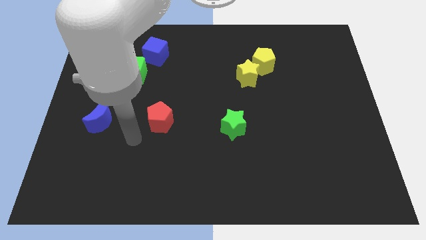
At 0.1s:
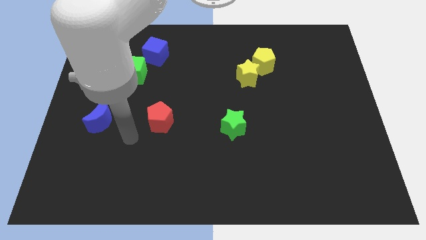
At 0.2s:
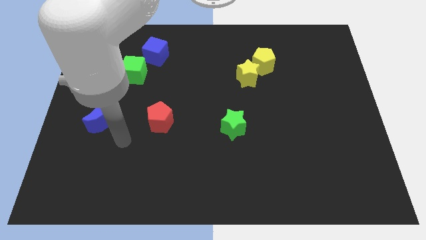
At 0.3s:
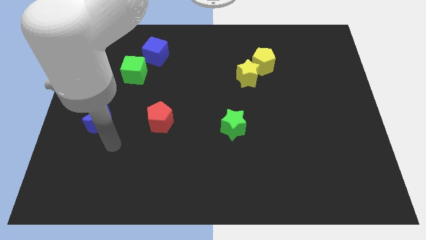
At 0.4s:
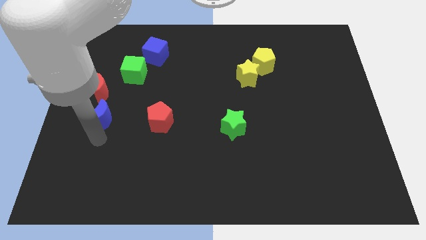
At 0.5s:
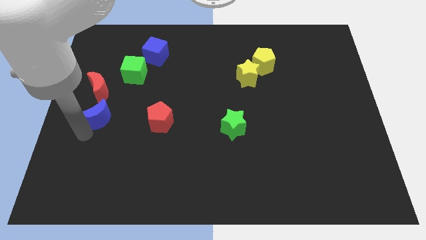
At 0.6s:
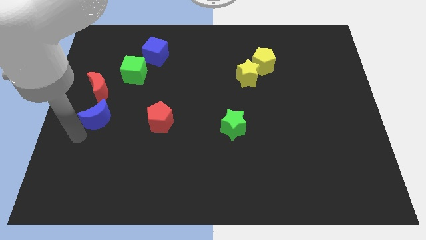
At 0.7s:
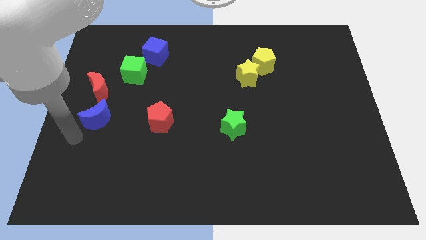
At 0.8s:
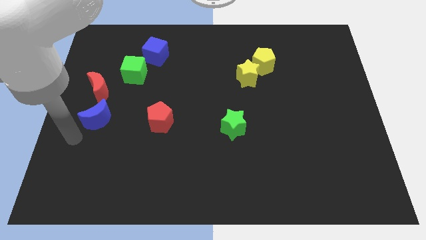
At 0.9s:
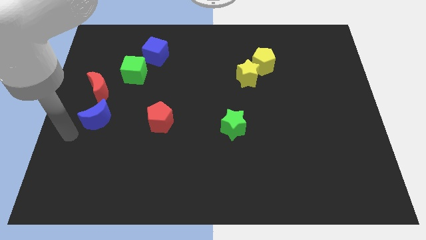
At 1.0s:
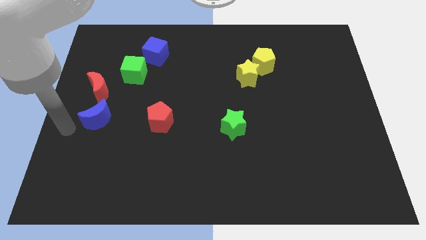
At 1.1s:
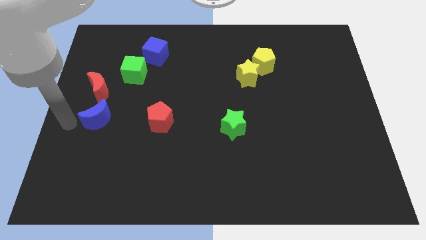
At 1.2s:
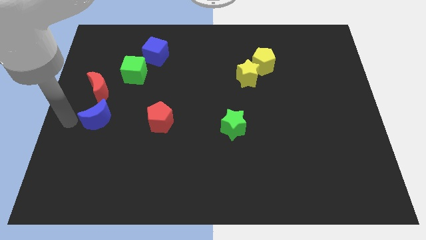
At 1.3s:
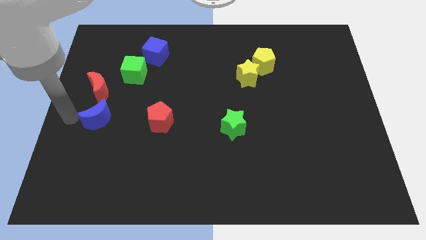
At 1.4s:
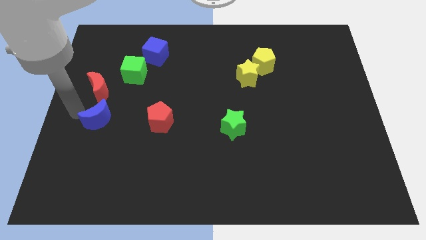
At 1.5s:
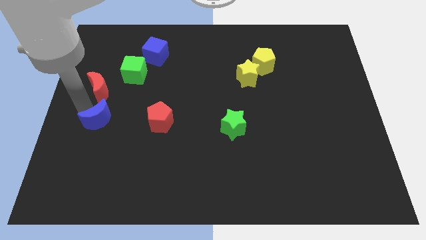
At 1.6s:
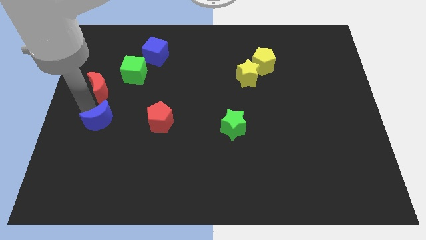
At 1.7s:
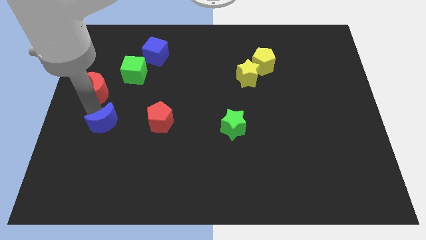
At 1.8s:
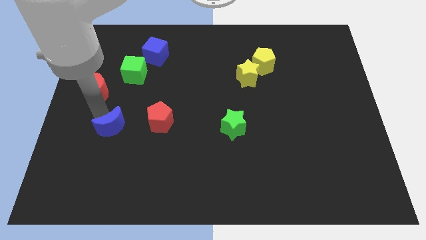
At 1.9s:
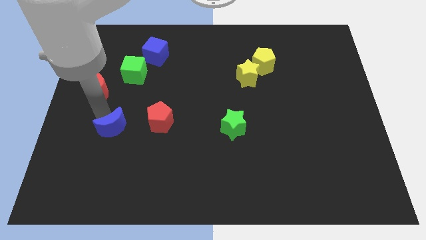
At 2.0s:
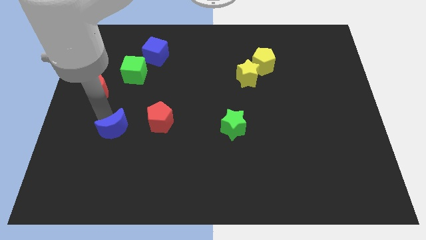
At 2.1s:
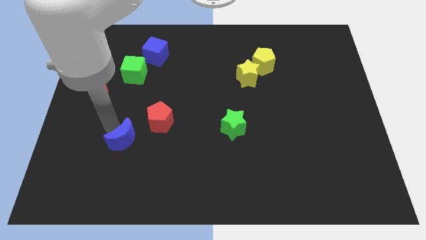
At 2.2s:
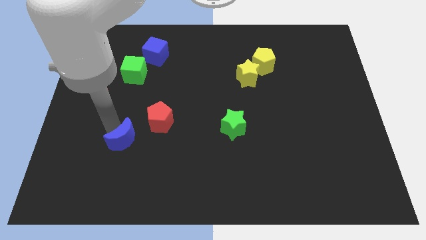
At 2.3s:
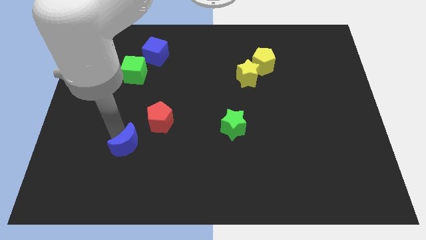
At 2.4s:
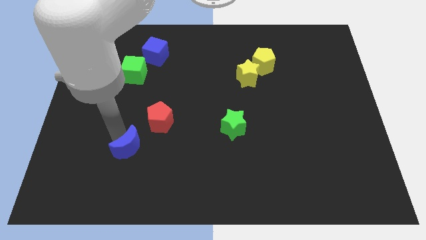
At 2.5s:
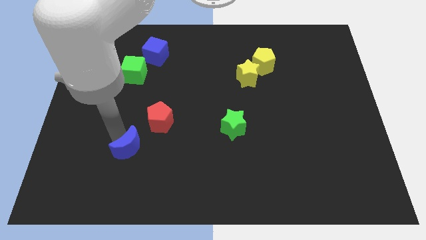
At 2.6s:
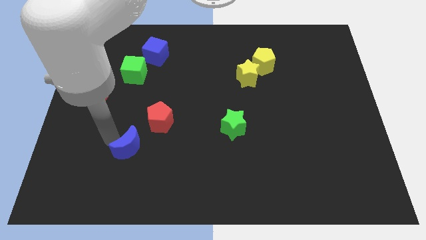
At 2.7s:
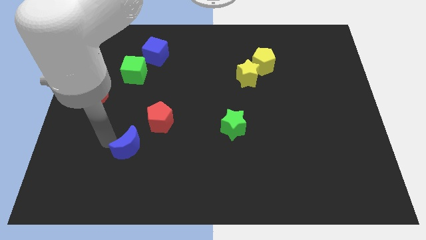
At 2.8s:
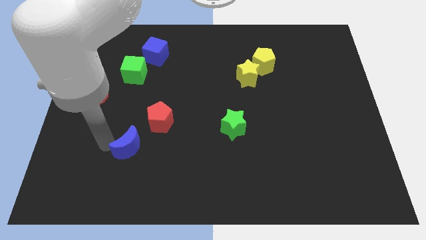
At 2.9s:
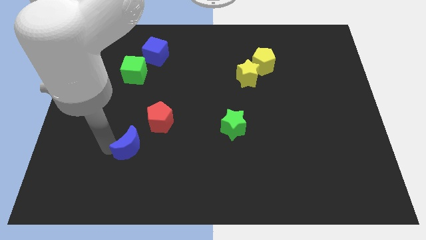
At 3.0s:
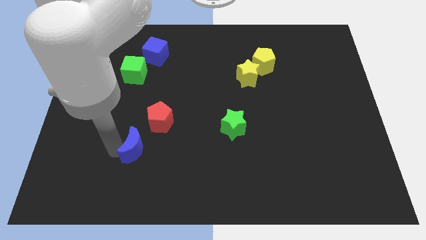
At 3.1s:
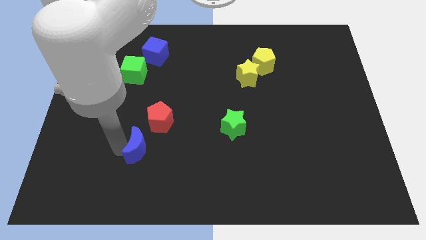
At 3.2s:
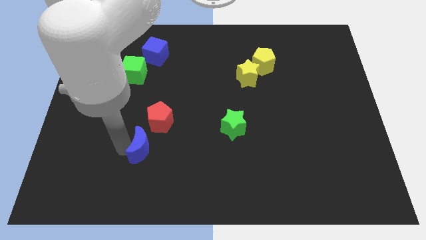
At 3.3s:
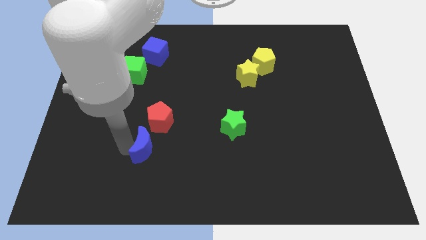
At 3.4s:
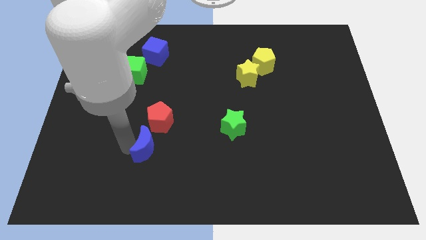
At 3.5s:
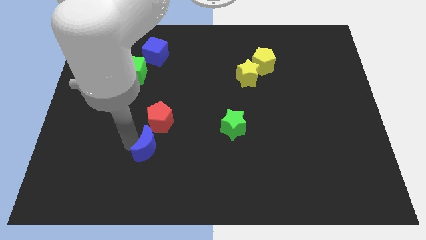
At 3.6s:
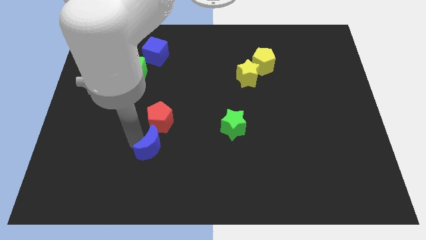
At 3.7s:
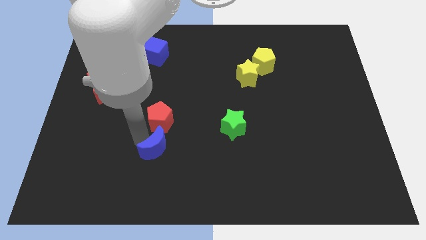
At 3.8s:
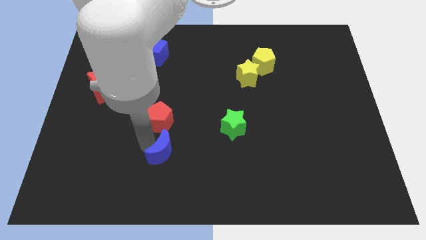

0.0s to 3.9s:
place the blue moon below the red pentagon

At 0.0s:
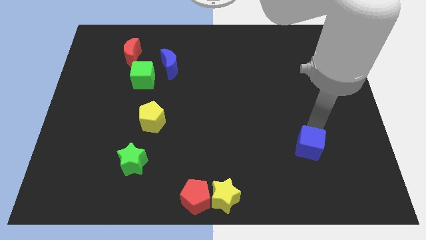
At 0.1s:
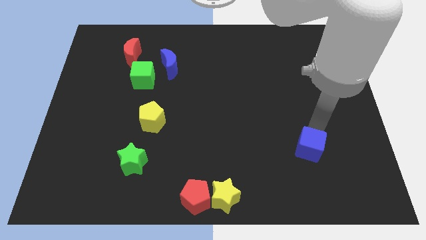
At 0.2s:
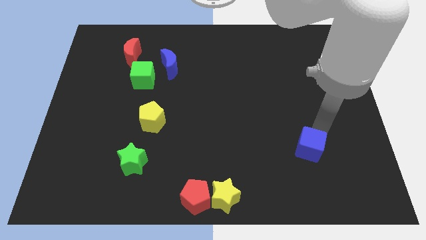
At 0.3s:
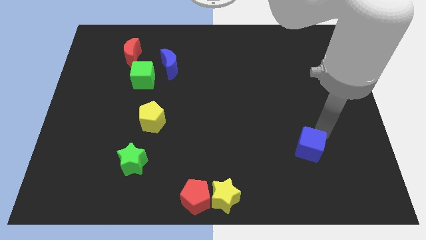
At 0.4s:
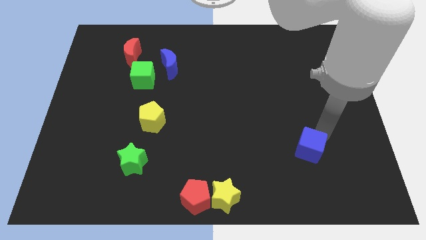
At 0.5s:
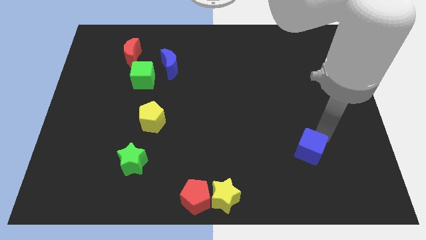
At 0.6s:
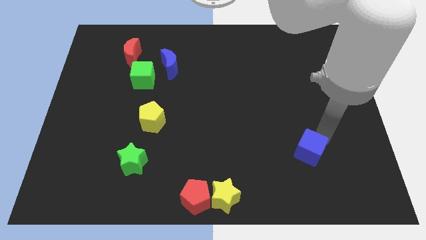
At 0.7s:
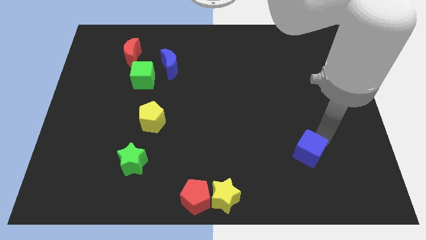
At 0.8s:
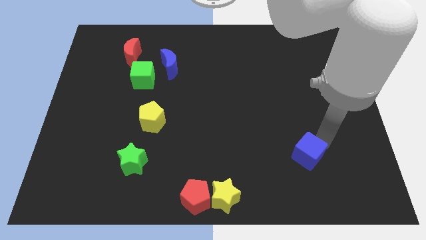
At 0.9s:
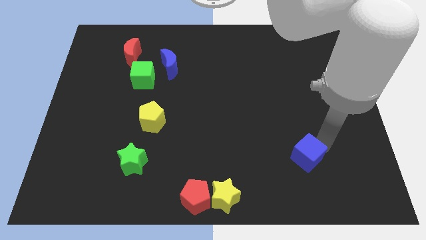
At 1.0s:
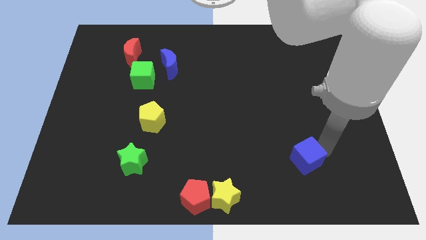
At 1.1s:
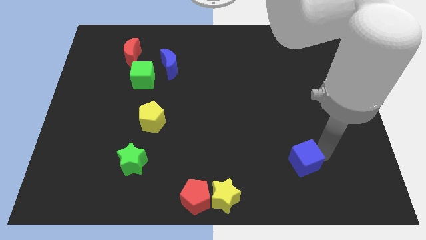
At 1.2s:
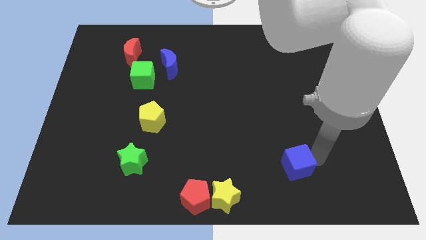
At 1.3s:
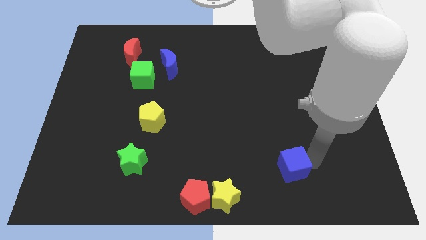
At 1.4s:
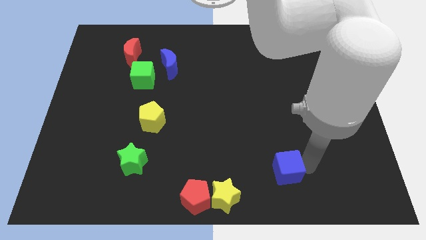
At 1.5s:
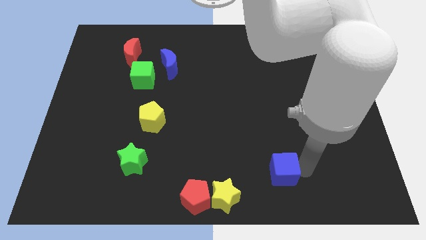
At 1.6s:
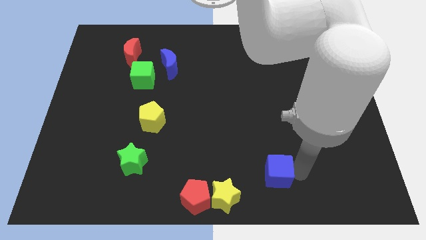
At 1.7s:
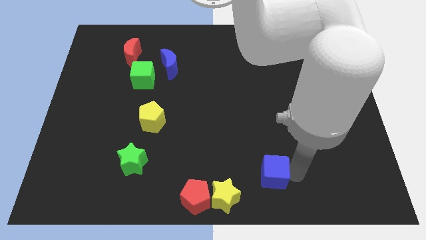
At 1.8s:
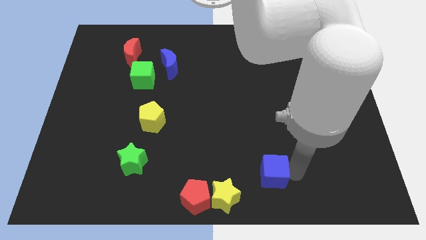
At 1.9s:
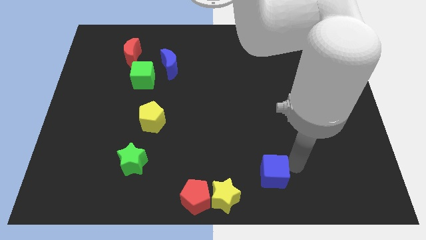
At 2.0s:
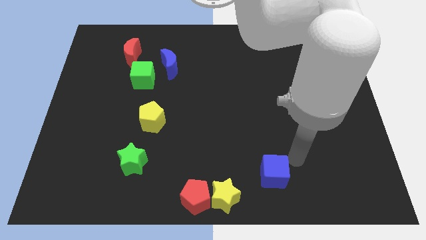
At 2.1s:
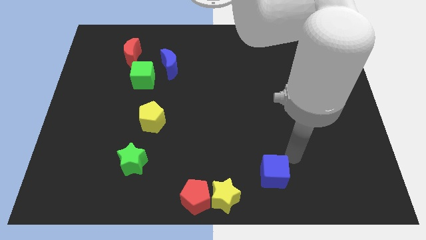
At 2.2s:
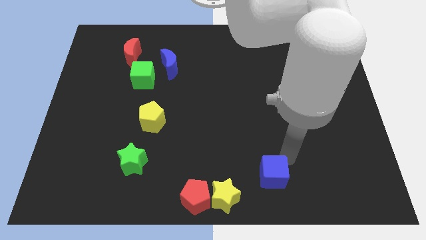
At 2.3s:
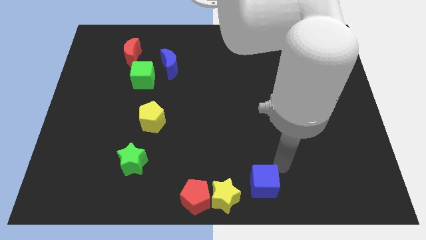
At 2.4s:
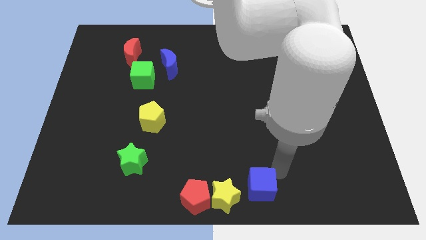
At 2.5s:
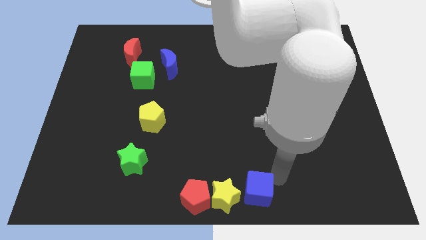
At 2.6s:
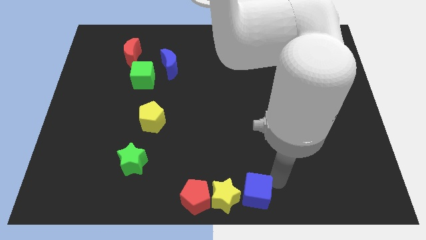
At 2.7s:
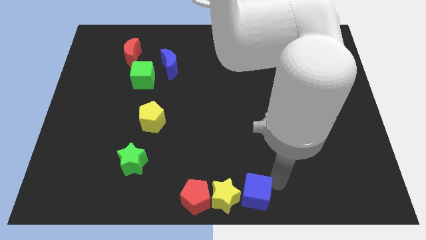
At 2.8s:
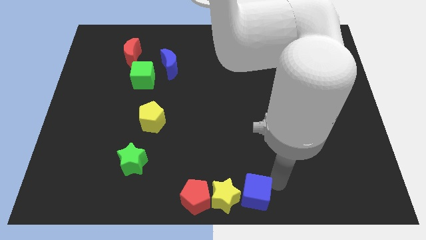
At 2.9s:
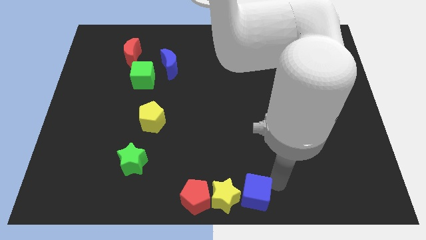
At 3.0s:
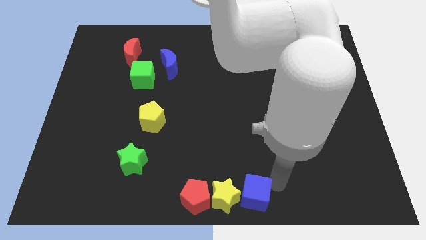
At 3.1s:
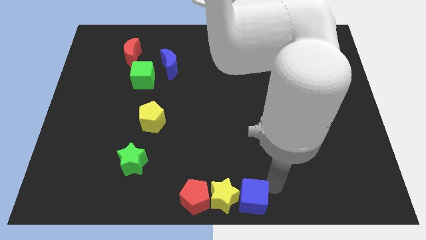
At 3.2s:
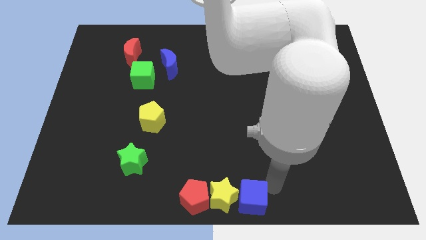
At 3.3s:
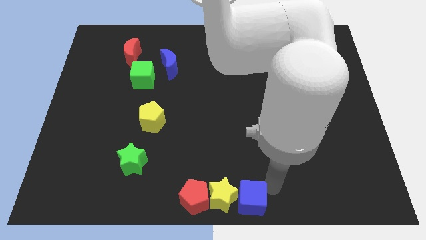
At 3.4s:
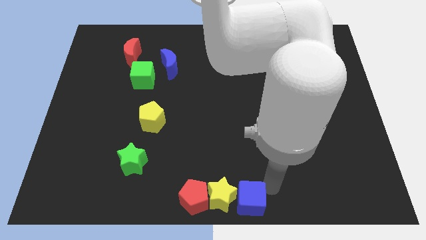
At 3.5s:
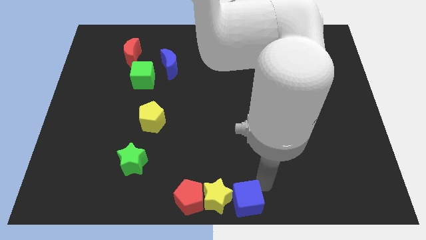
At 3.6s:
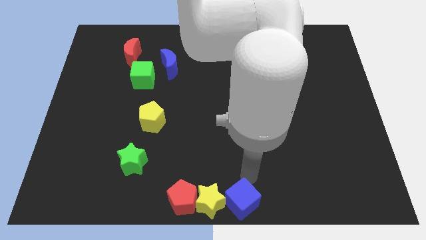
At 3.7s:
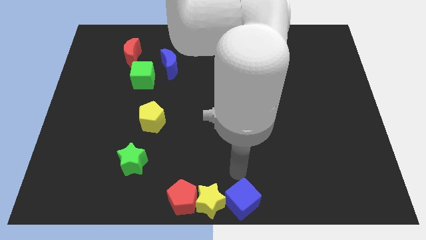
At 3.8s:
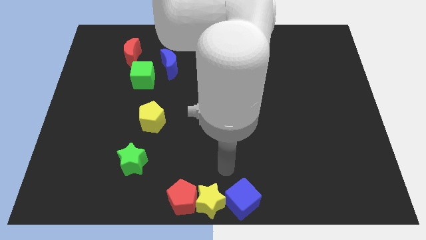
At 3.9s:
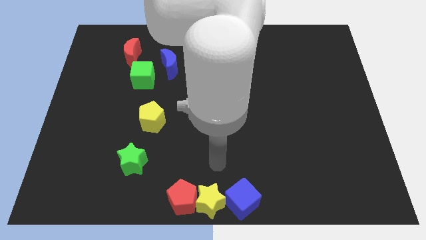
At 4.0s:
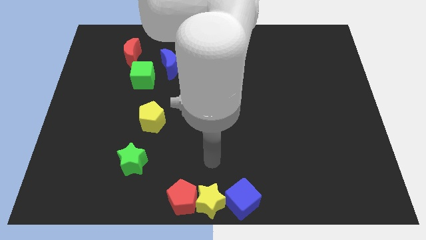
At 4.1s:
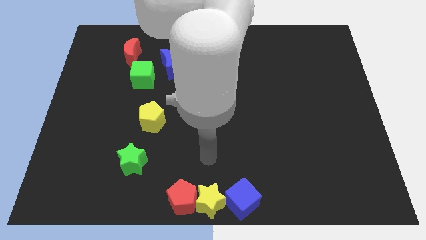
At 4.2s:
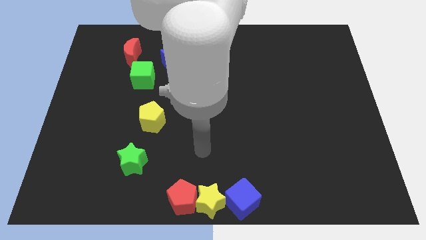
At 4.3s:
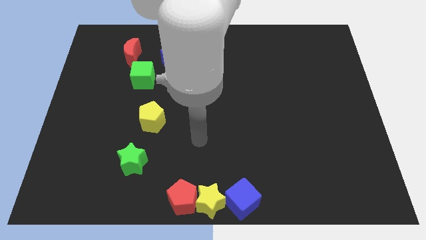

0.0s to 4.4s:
push the blue cube into the group of blocks

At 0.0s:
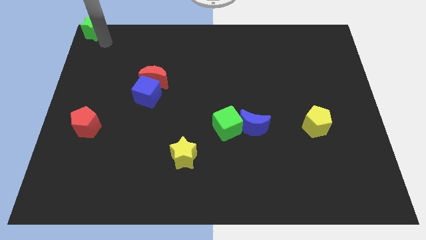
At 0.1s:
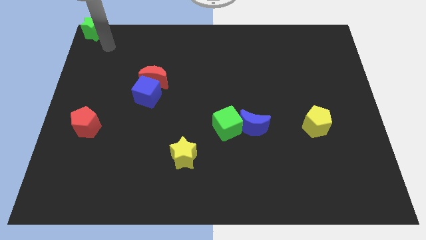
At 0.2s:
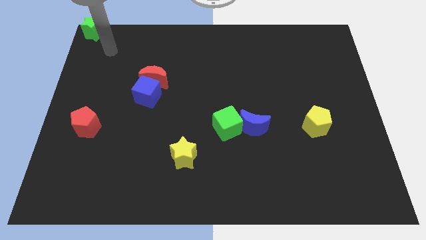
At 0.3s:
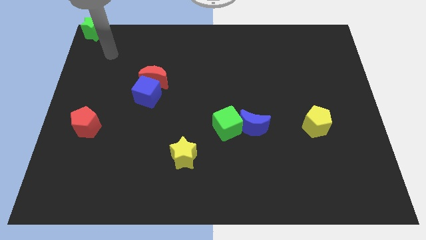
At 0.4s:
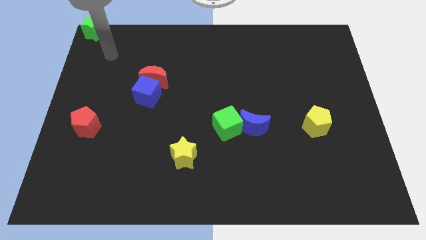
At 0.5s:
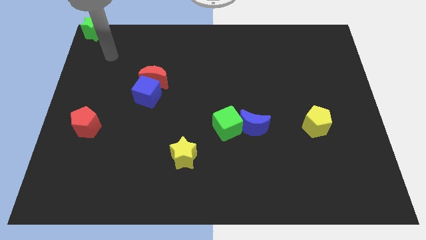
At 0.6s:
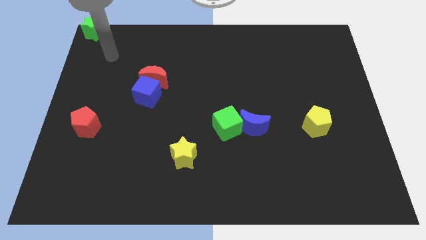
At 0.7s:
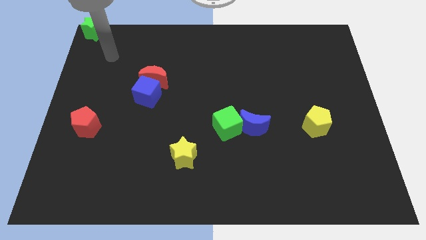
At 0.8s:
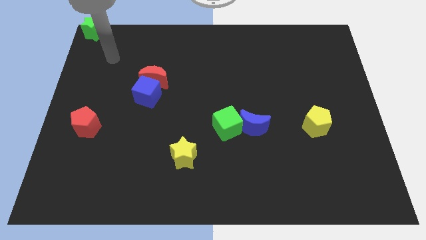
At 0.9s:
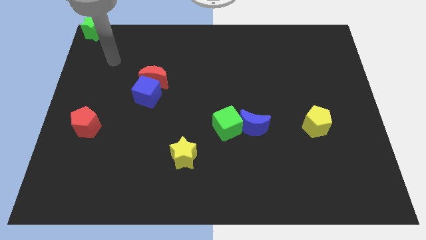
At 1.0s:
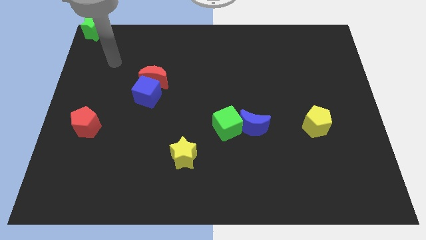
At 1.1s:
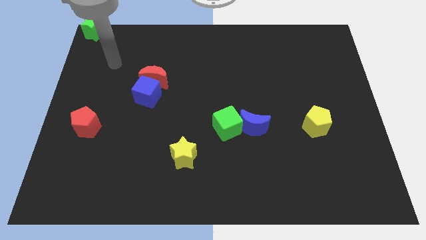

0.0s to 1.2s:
move your arm away from green star
